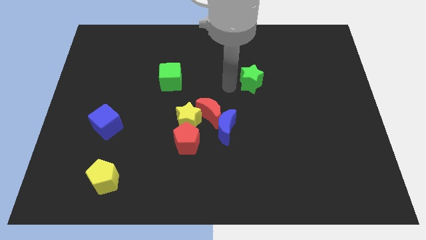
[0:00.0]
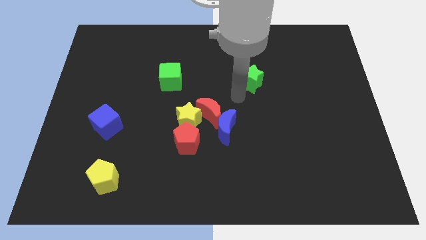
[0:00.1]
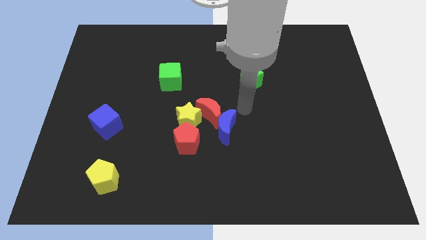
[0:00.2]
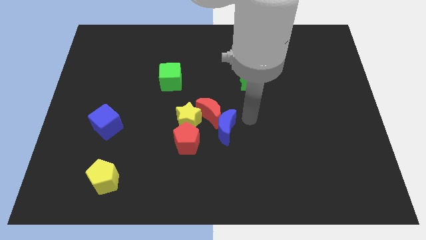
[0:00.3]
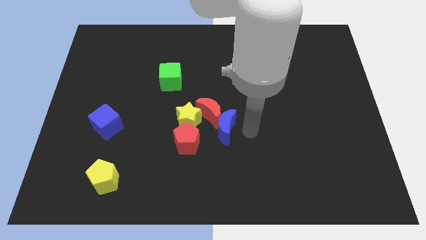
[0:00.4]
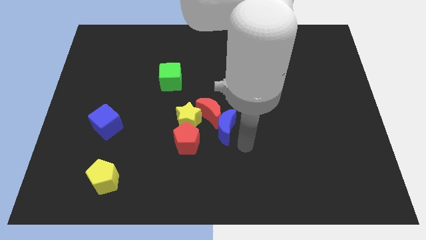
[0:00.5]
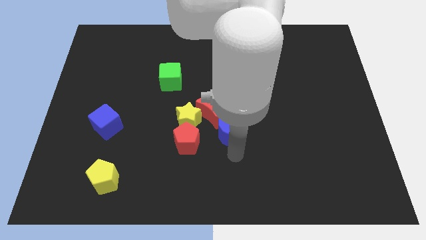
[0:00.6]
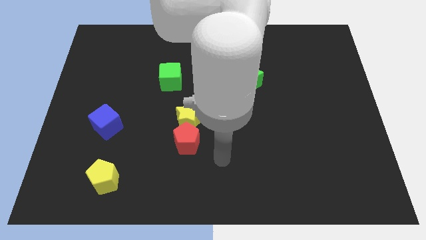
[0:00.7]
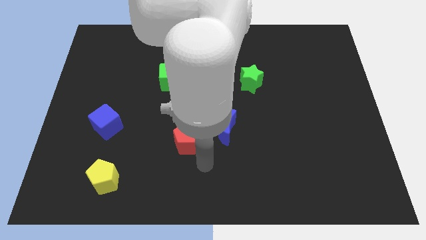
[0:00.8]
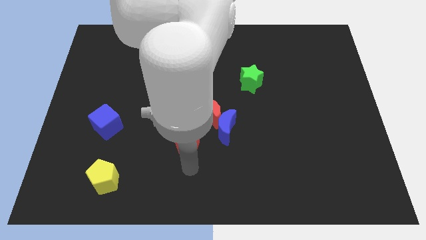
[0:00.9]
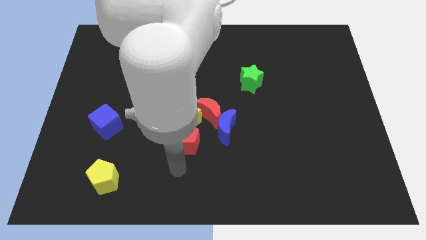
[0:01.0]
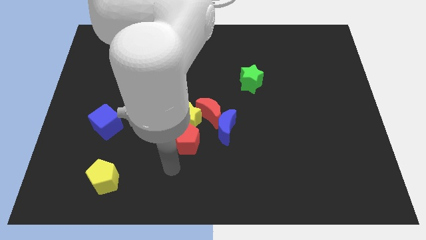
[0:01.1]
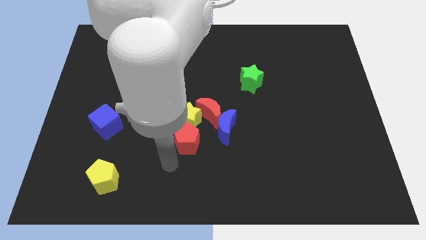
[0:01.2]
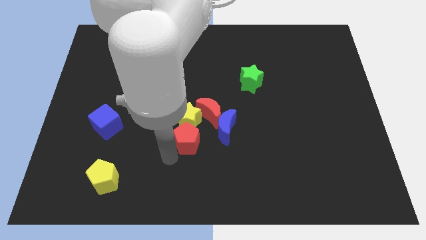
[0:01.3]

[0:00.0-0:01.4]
go near red pentagon

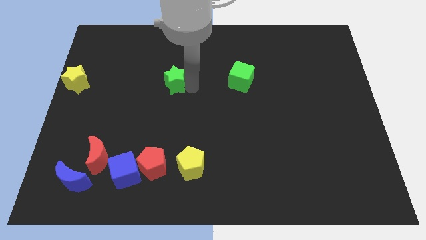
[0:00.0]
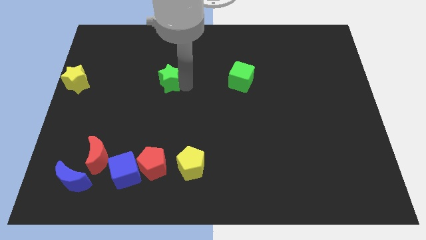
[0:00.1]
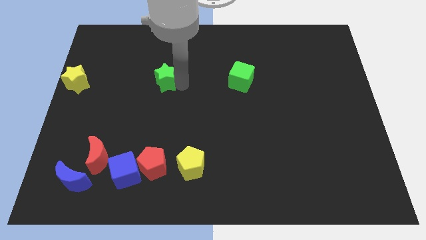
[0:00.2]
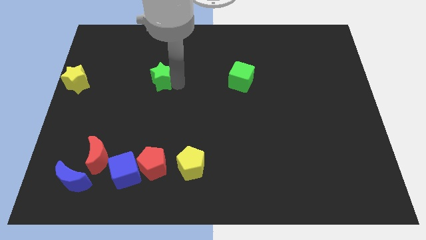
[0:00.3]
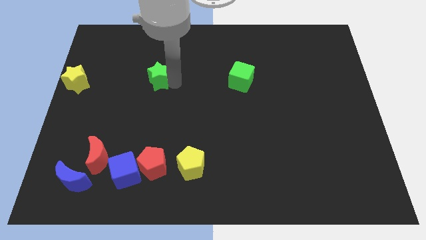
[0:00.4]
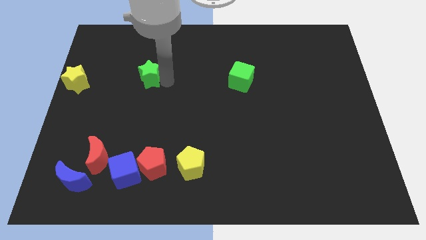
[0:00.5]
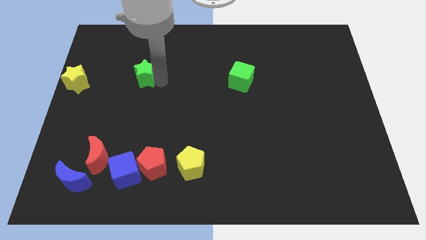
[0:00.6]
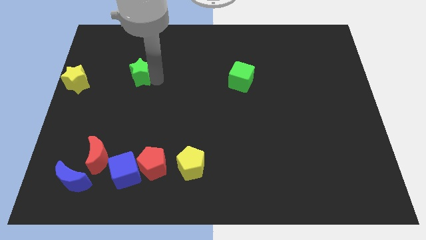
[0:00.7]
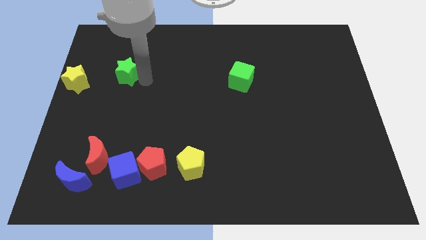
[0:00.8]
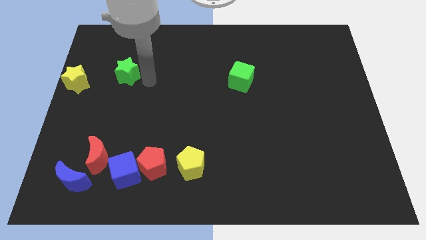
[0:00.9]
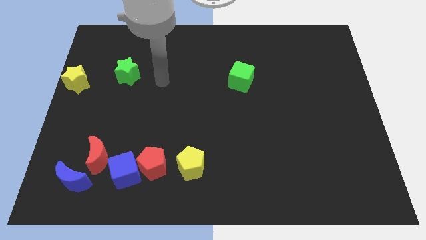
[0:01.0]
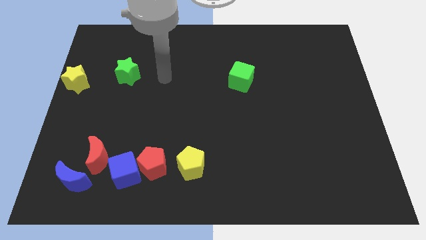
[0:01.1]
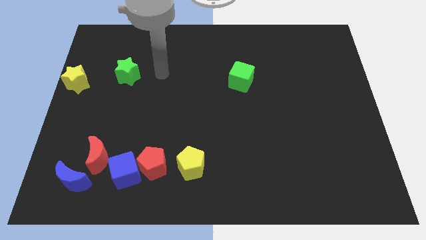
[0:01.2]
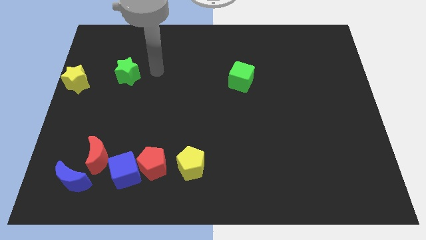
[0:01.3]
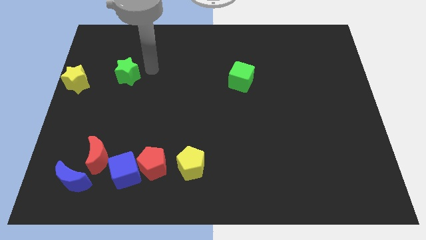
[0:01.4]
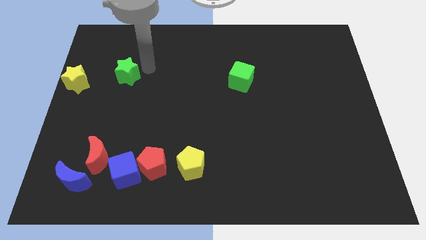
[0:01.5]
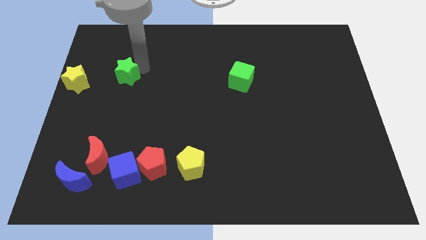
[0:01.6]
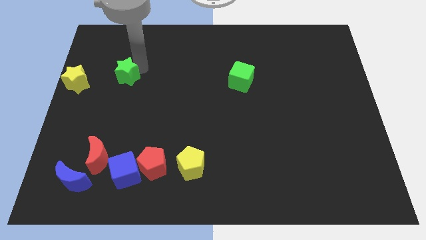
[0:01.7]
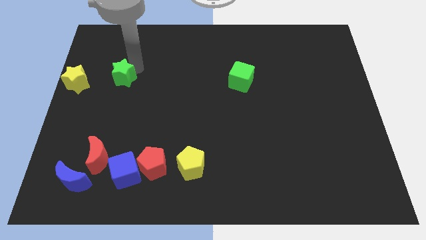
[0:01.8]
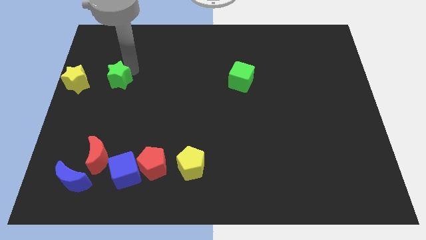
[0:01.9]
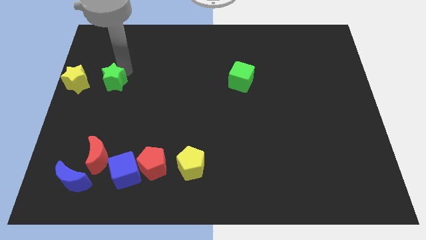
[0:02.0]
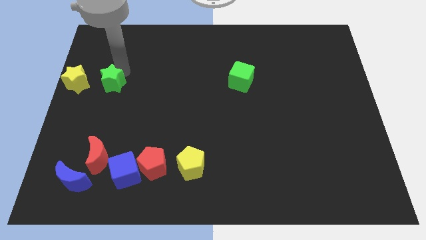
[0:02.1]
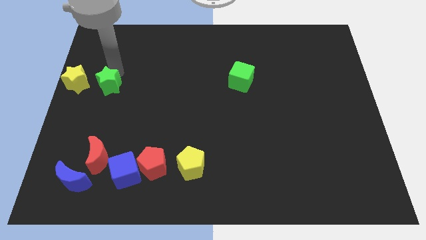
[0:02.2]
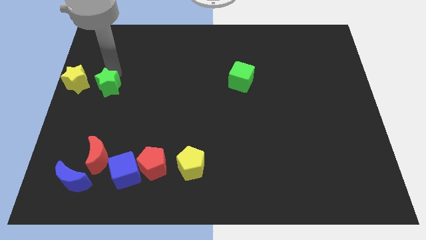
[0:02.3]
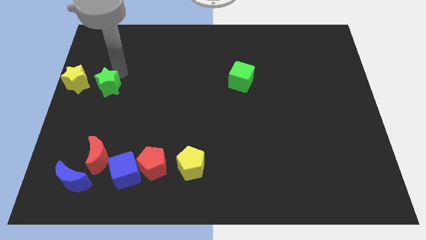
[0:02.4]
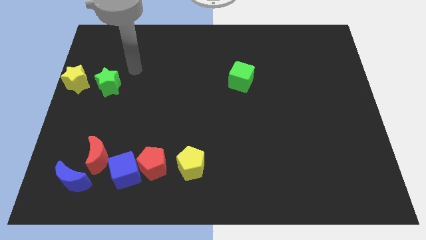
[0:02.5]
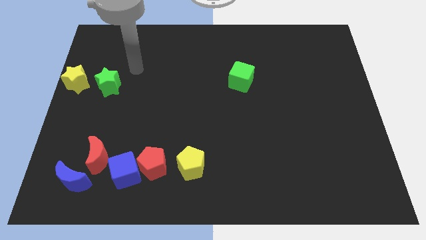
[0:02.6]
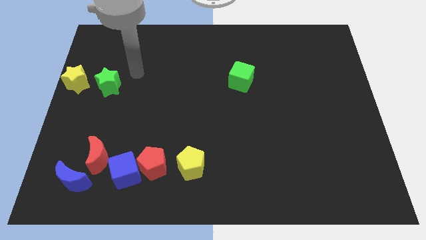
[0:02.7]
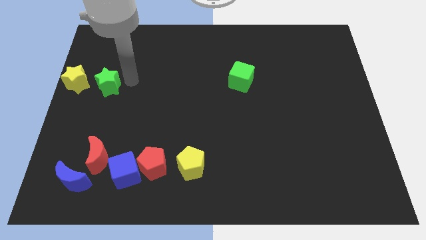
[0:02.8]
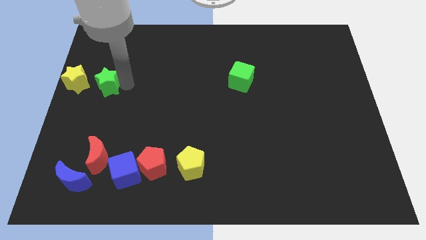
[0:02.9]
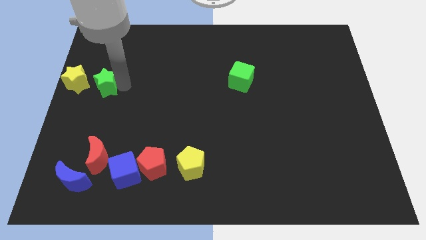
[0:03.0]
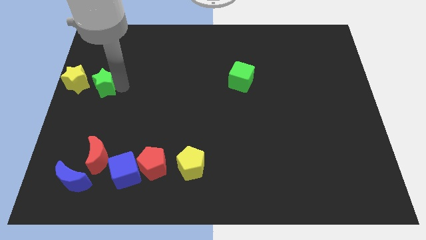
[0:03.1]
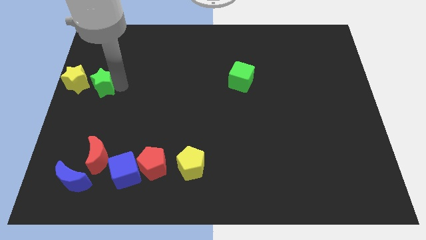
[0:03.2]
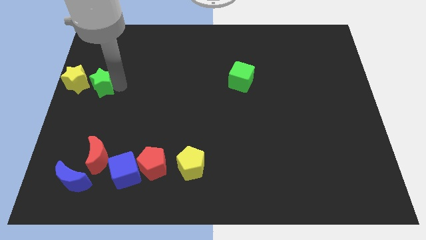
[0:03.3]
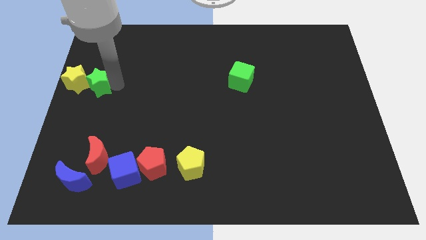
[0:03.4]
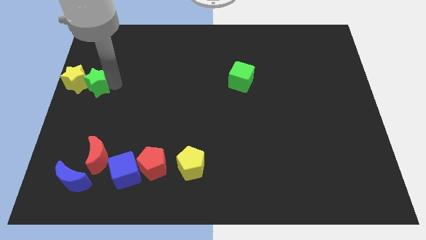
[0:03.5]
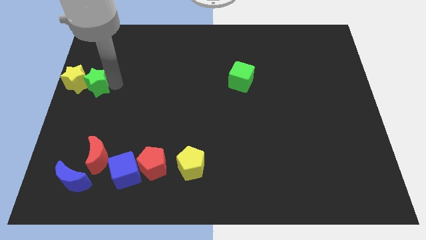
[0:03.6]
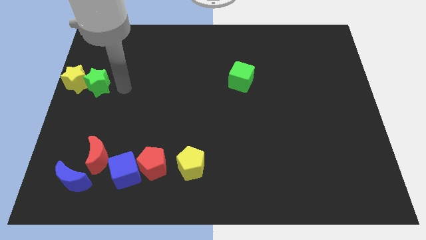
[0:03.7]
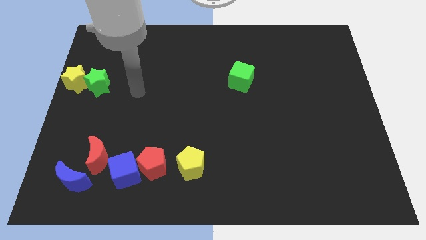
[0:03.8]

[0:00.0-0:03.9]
push the green star into yellow star

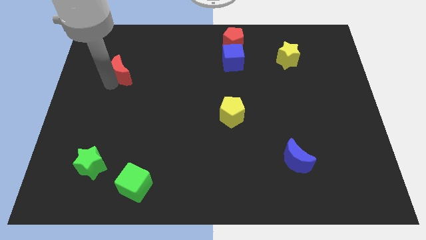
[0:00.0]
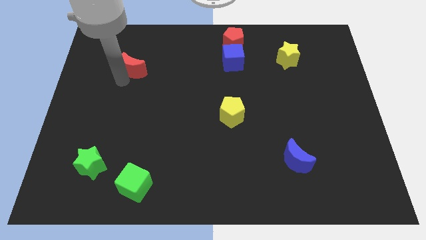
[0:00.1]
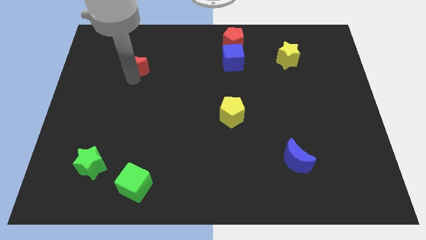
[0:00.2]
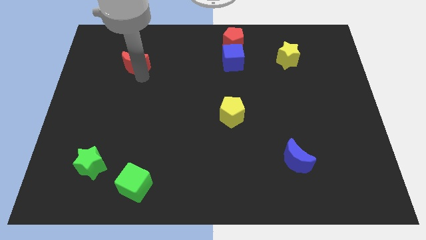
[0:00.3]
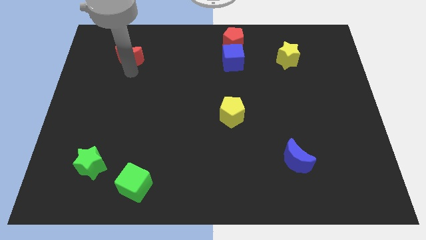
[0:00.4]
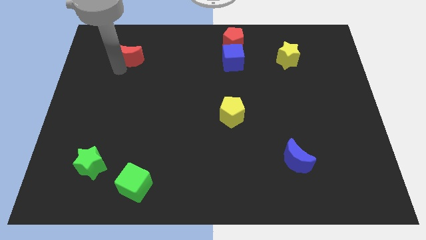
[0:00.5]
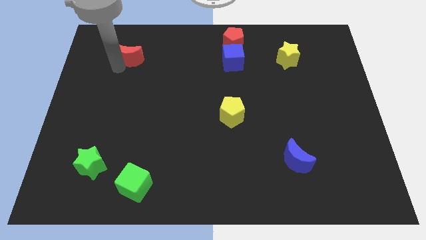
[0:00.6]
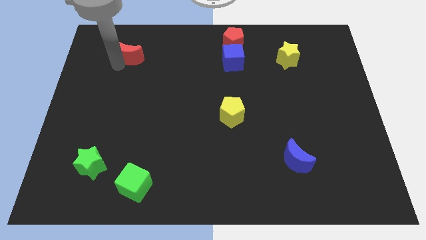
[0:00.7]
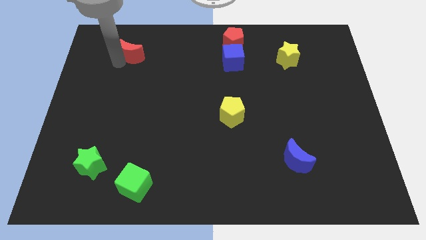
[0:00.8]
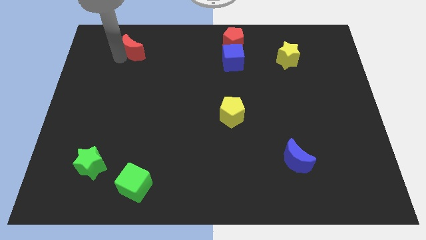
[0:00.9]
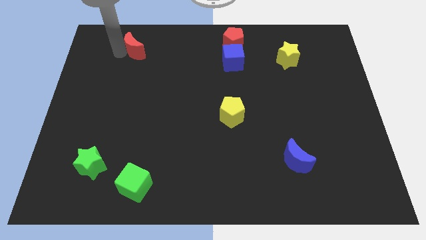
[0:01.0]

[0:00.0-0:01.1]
move red moon parallel to red pentagon

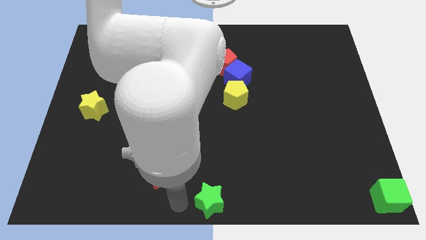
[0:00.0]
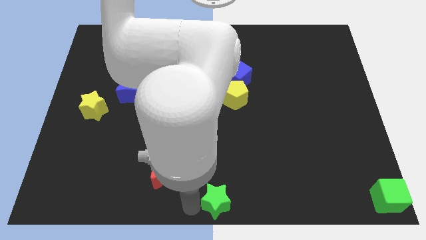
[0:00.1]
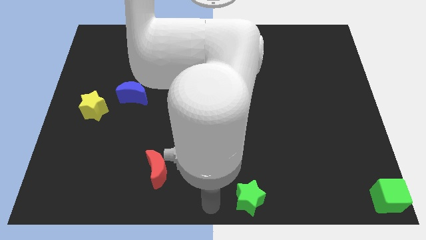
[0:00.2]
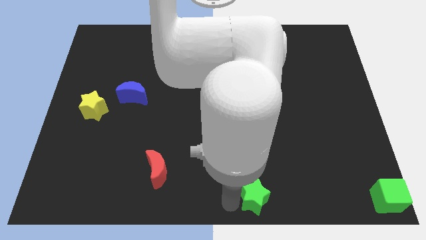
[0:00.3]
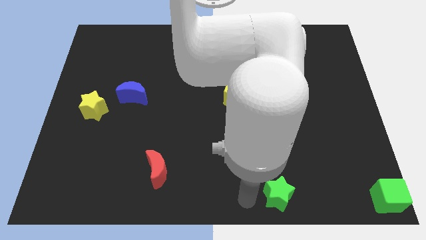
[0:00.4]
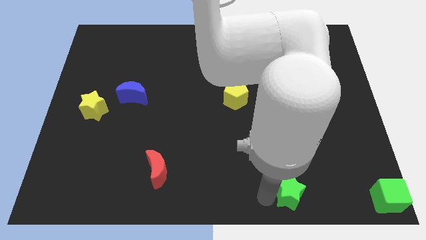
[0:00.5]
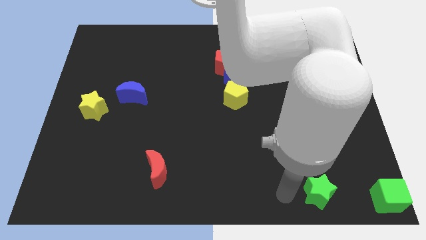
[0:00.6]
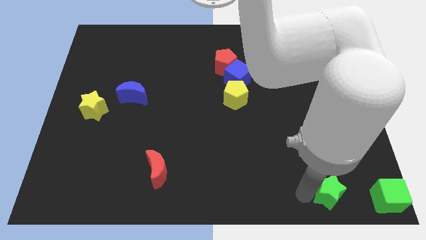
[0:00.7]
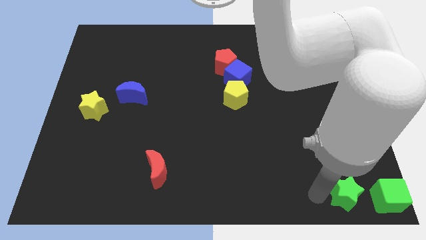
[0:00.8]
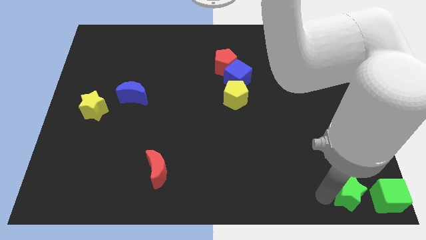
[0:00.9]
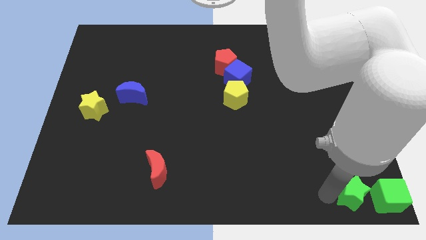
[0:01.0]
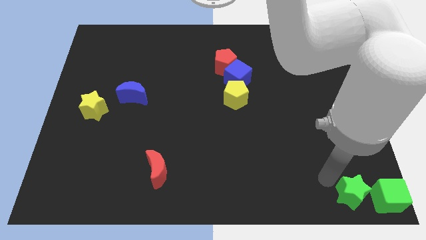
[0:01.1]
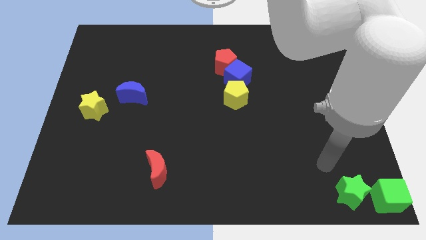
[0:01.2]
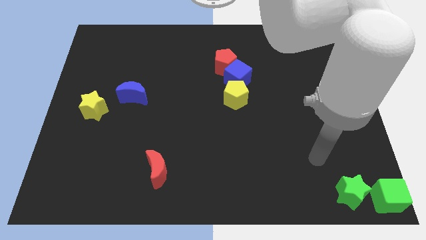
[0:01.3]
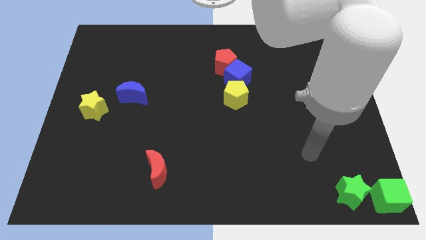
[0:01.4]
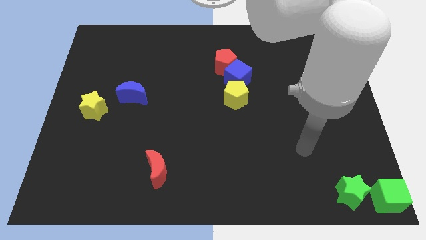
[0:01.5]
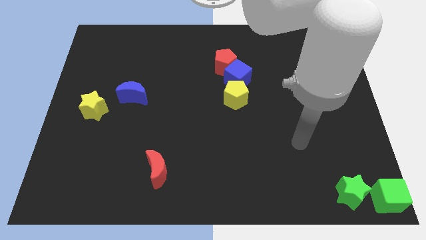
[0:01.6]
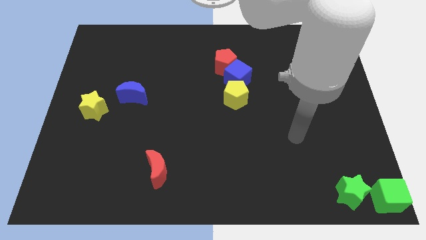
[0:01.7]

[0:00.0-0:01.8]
push the green star to the right

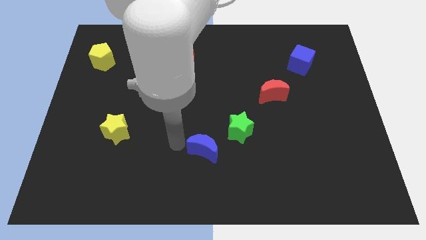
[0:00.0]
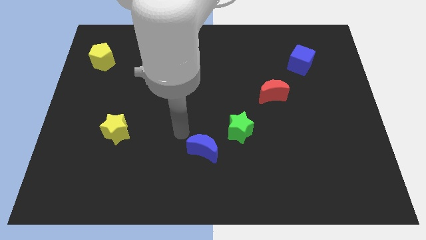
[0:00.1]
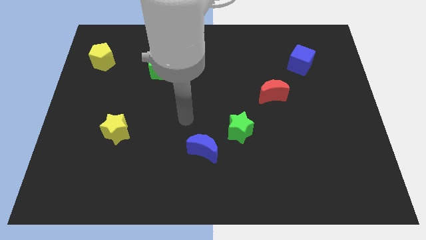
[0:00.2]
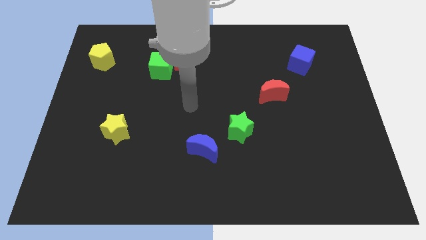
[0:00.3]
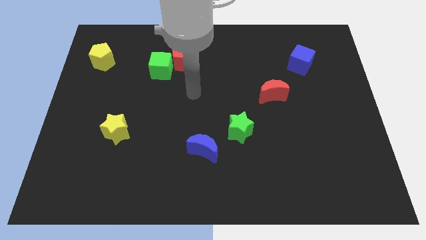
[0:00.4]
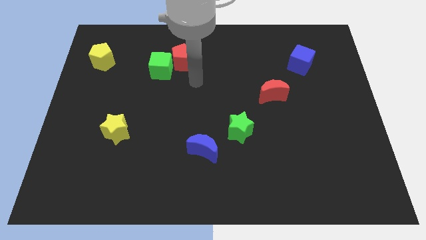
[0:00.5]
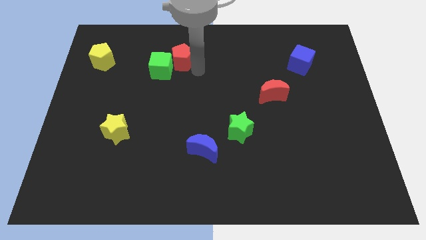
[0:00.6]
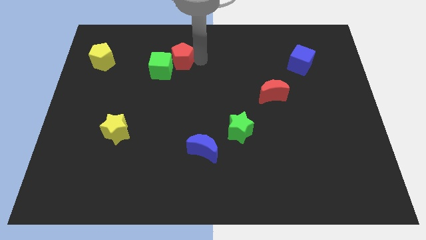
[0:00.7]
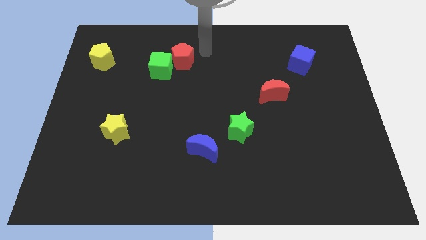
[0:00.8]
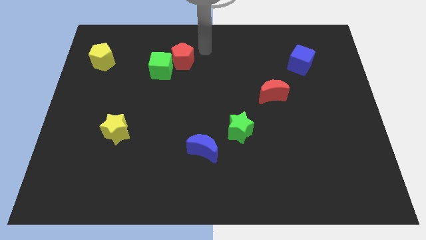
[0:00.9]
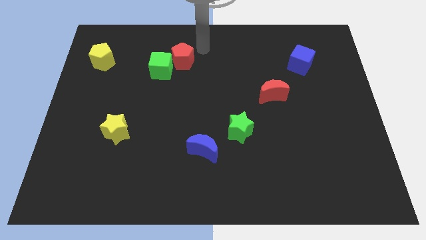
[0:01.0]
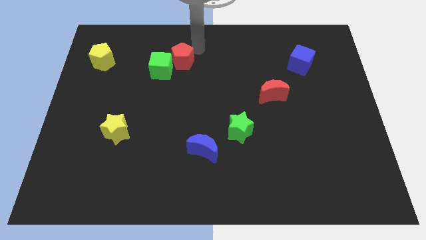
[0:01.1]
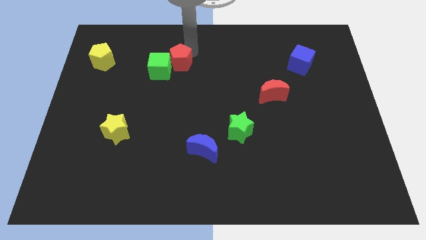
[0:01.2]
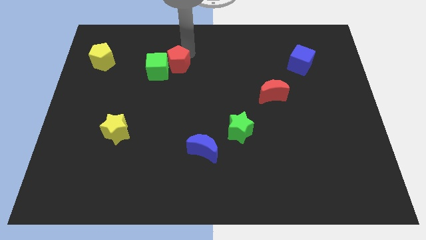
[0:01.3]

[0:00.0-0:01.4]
place your arm on top of red pentagon
